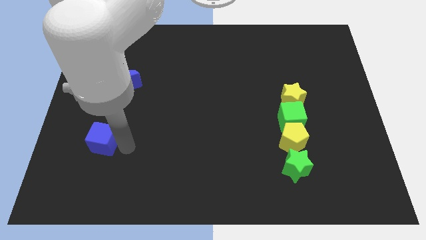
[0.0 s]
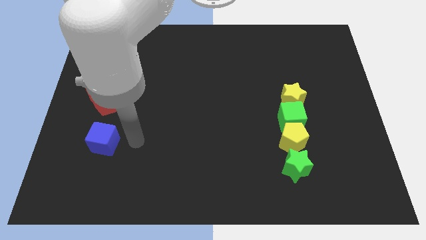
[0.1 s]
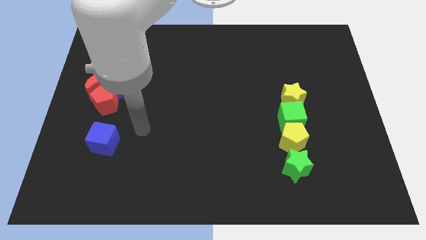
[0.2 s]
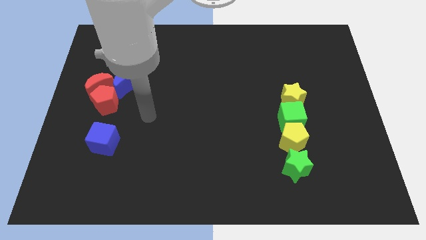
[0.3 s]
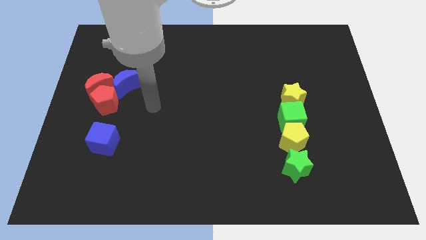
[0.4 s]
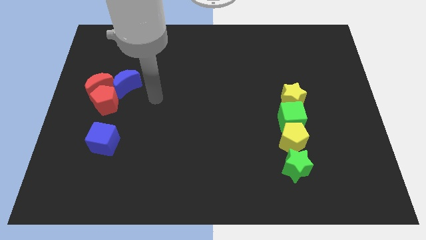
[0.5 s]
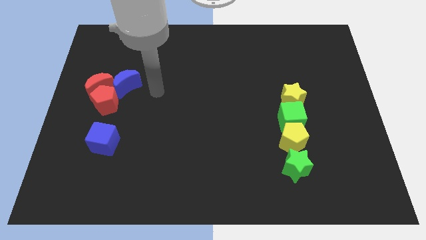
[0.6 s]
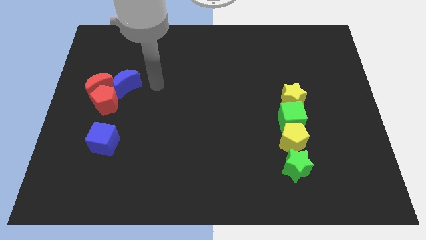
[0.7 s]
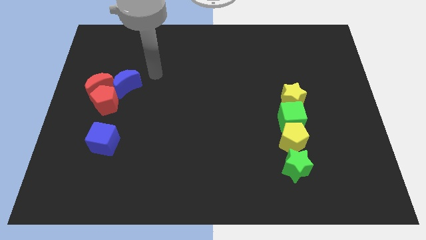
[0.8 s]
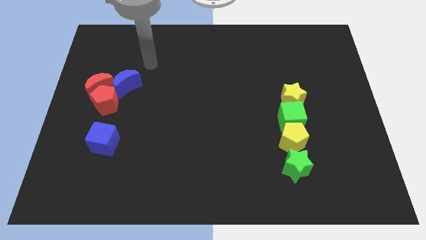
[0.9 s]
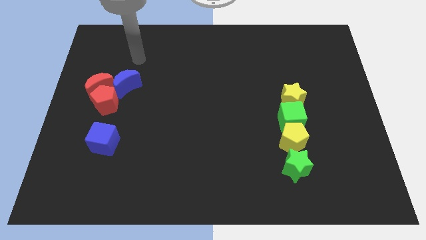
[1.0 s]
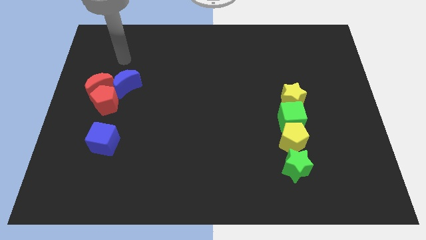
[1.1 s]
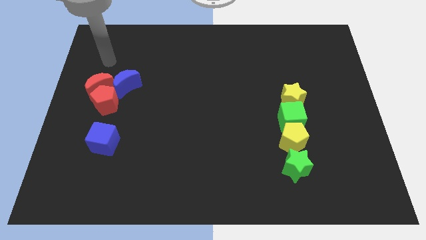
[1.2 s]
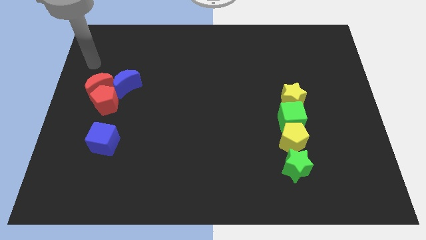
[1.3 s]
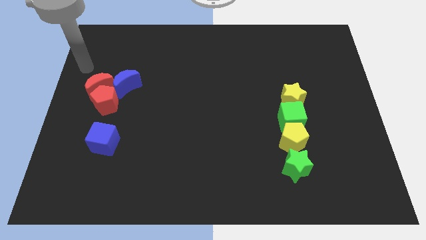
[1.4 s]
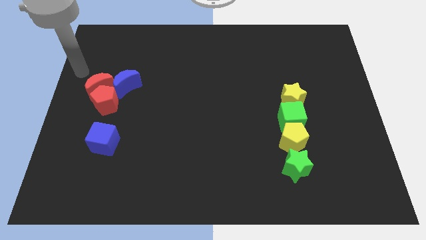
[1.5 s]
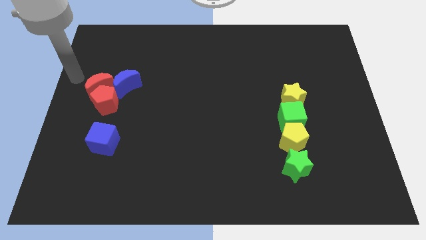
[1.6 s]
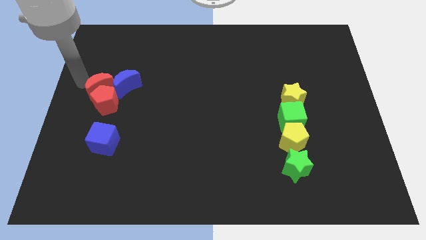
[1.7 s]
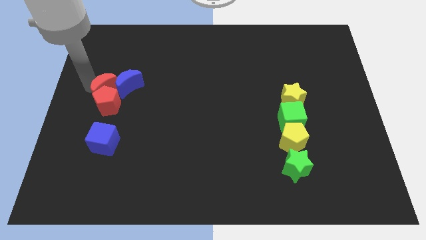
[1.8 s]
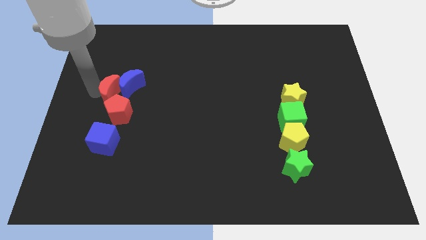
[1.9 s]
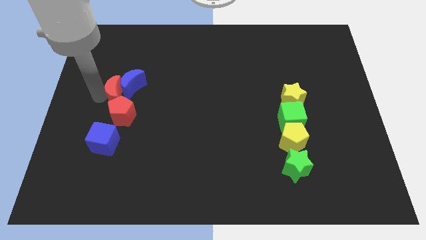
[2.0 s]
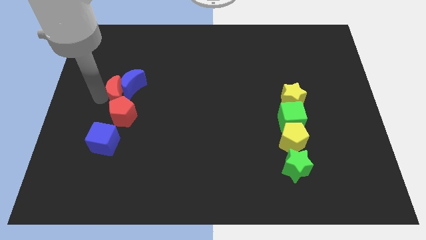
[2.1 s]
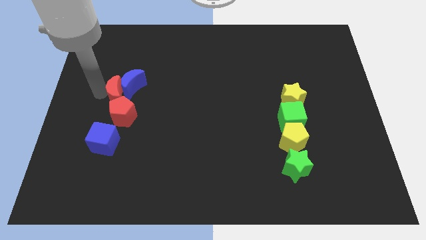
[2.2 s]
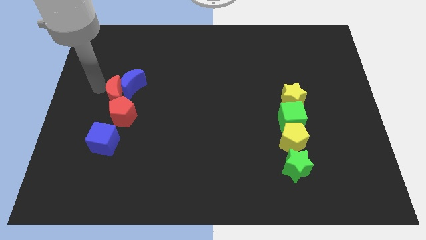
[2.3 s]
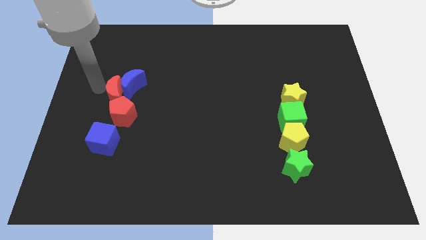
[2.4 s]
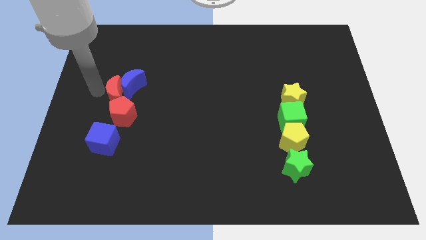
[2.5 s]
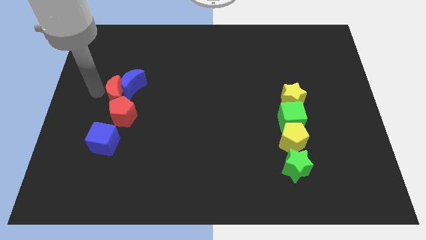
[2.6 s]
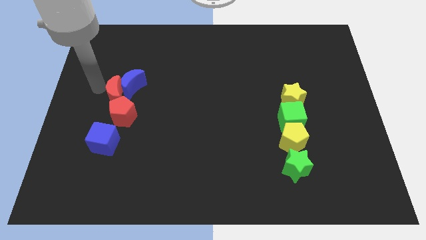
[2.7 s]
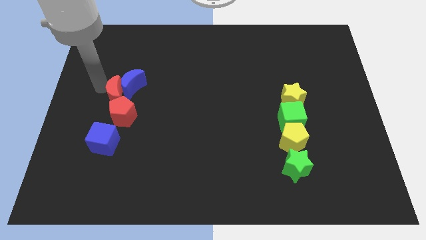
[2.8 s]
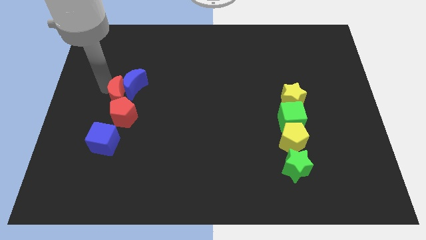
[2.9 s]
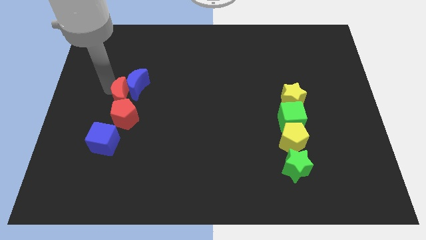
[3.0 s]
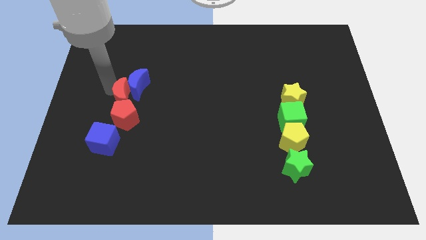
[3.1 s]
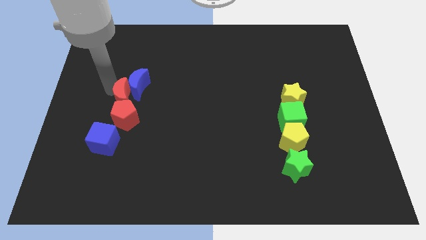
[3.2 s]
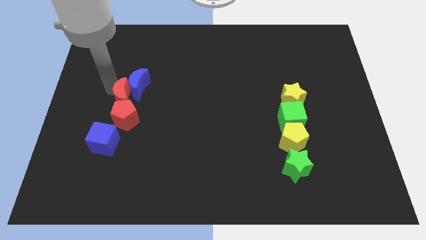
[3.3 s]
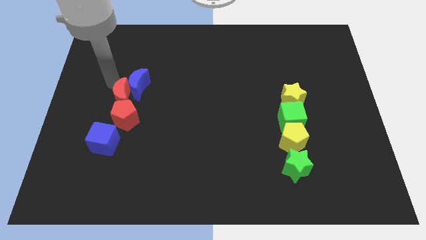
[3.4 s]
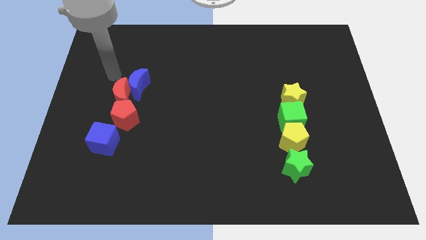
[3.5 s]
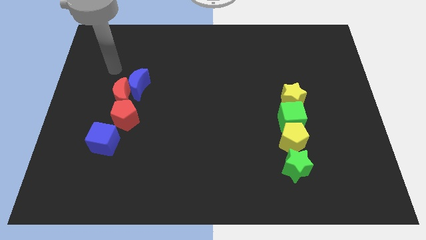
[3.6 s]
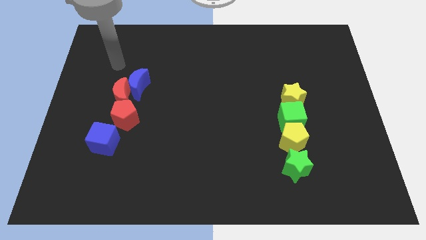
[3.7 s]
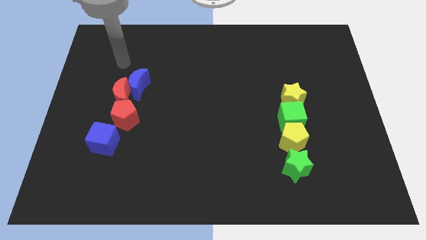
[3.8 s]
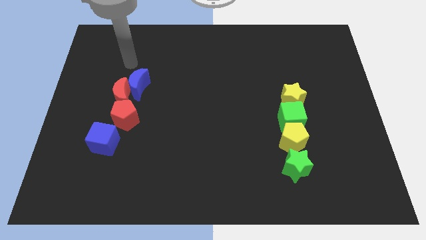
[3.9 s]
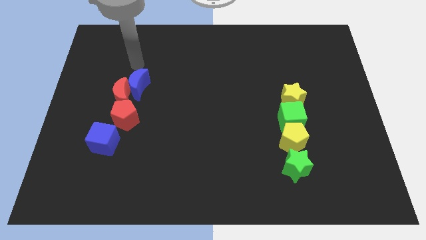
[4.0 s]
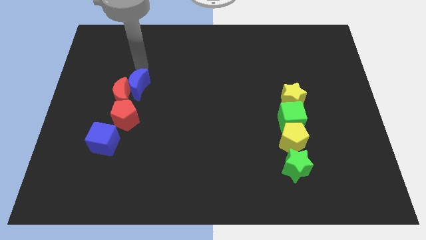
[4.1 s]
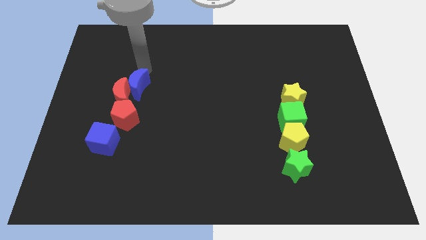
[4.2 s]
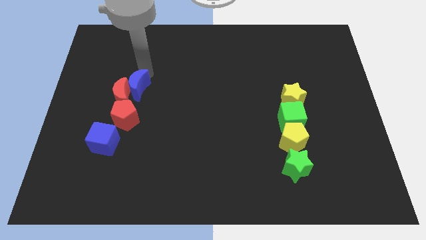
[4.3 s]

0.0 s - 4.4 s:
move the red crescent in between the blue crescent and red pentagon

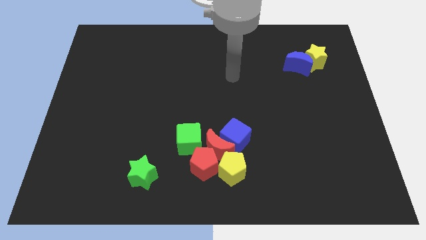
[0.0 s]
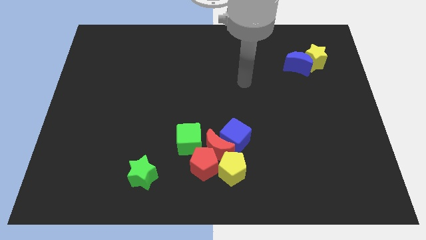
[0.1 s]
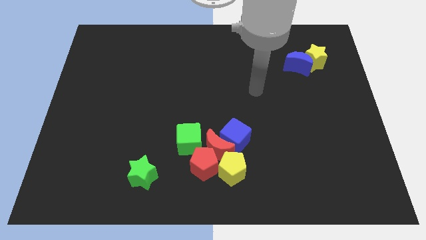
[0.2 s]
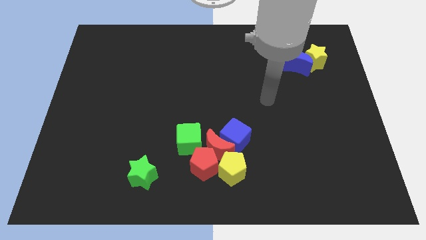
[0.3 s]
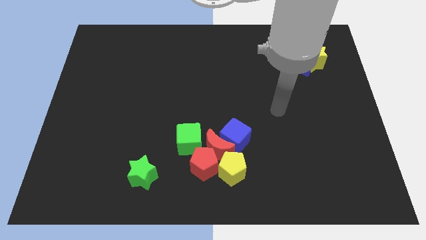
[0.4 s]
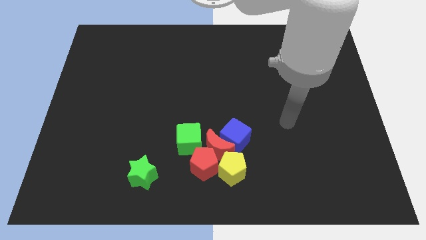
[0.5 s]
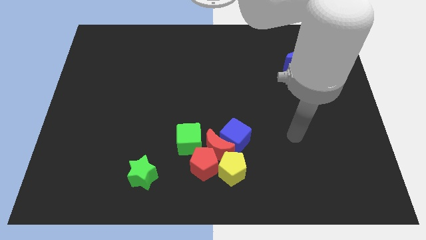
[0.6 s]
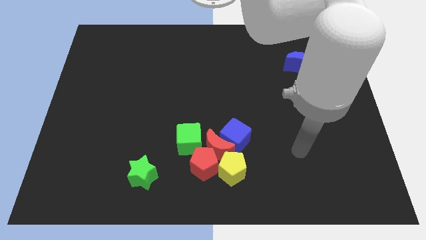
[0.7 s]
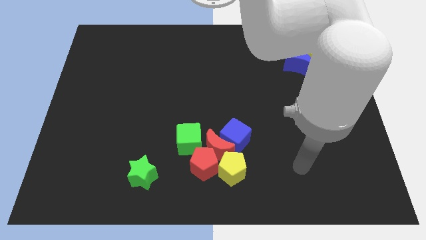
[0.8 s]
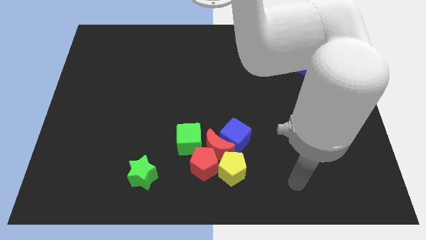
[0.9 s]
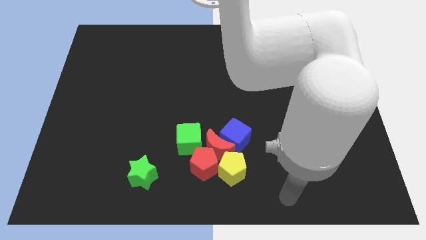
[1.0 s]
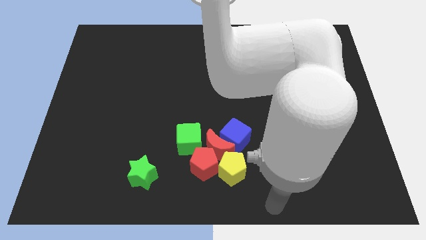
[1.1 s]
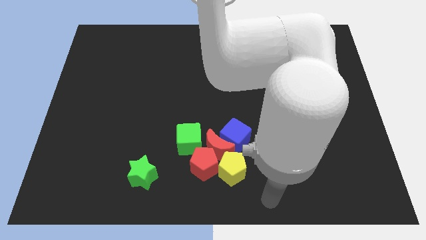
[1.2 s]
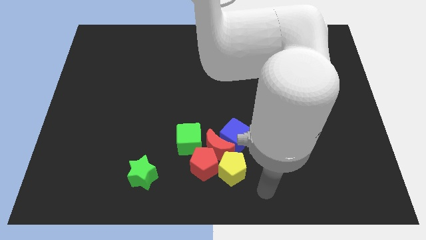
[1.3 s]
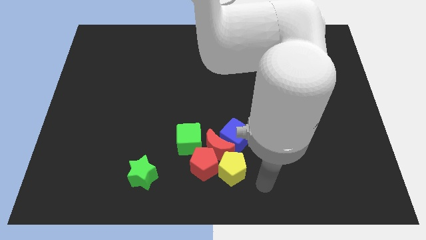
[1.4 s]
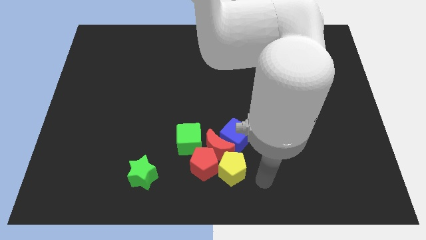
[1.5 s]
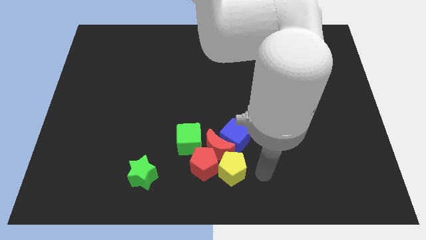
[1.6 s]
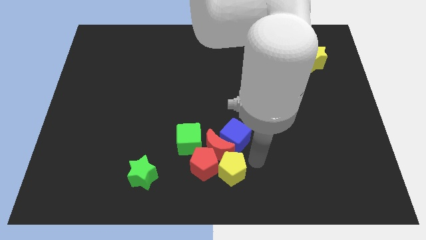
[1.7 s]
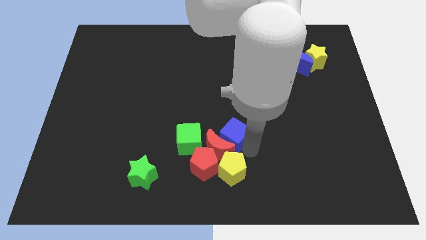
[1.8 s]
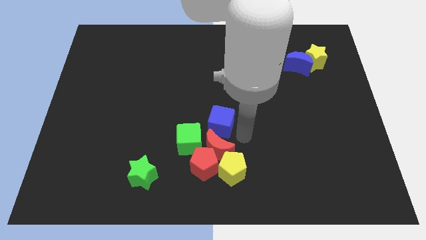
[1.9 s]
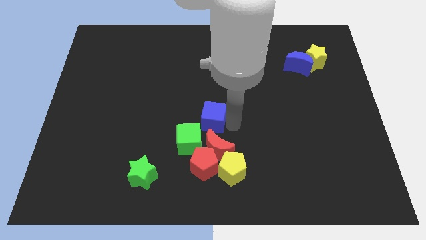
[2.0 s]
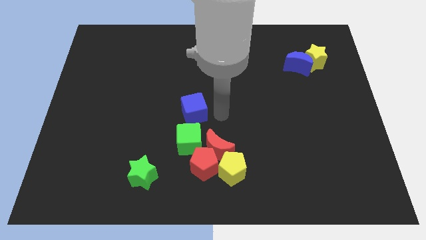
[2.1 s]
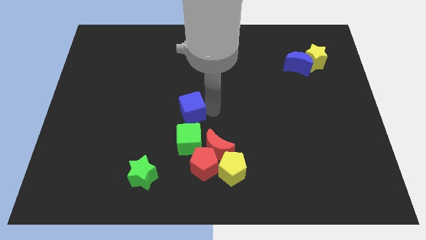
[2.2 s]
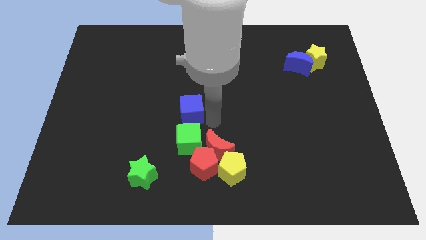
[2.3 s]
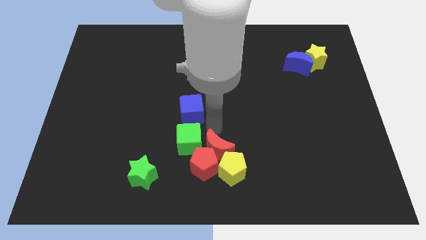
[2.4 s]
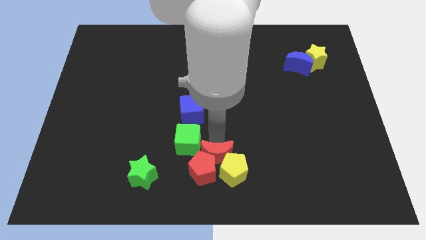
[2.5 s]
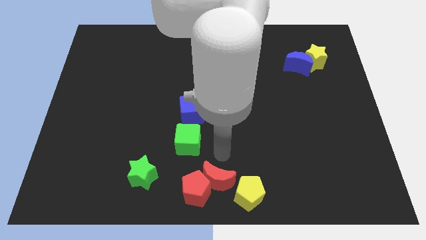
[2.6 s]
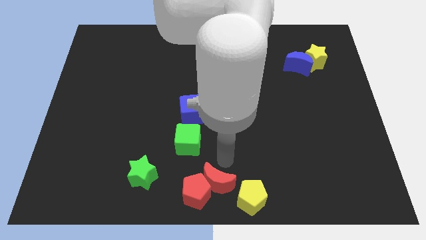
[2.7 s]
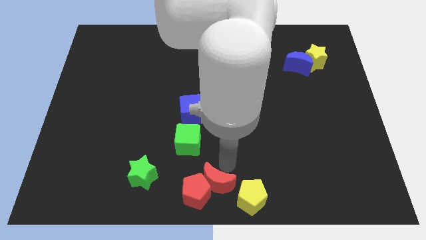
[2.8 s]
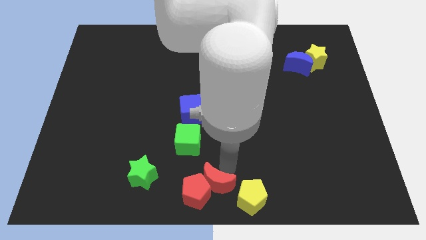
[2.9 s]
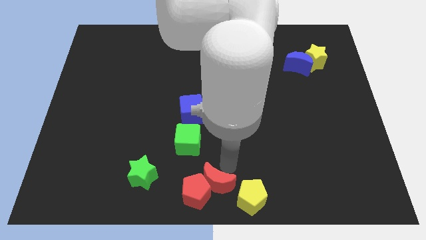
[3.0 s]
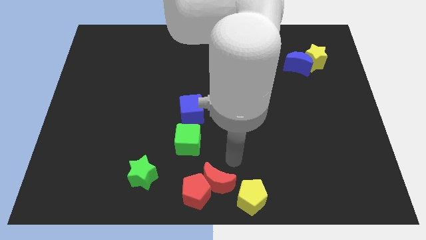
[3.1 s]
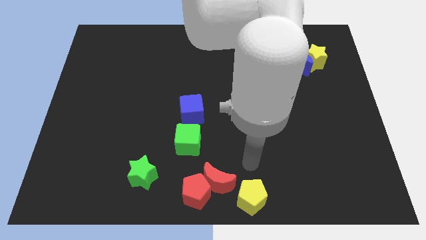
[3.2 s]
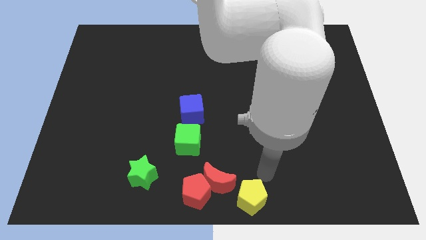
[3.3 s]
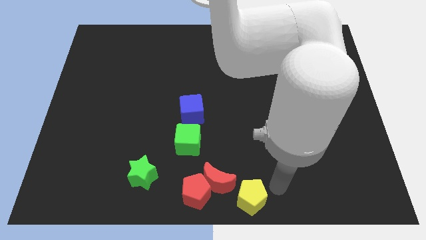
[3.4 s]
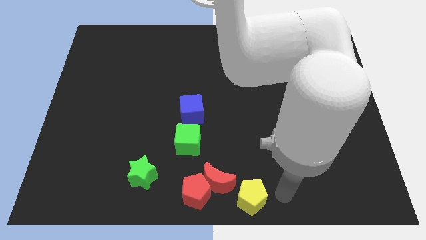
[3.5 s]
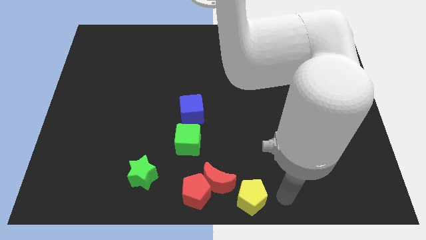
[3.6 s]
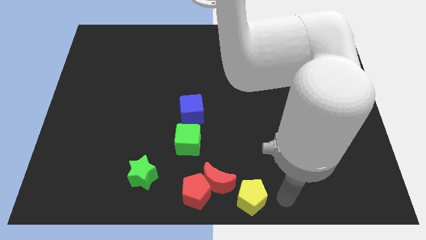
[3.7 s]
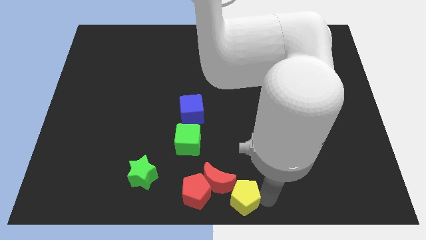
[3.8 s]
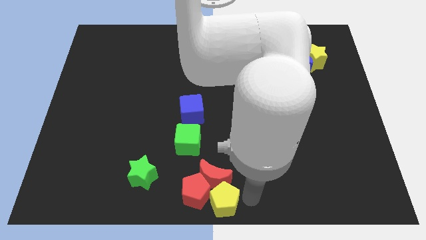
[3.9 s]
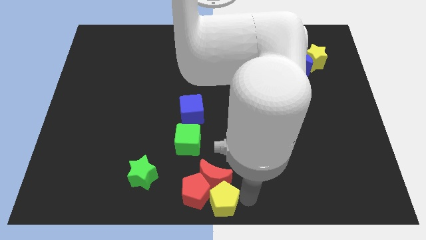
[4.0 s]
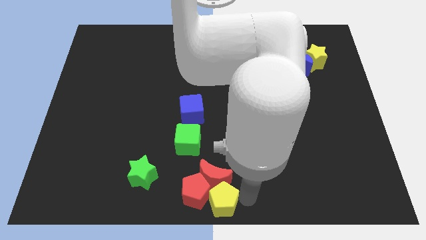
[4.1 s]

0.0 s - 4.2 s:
push the yellow pentagon into the red blocks

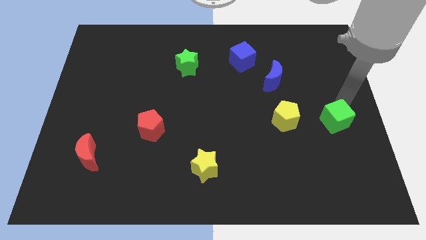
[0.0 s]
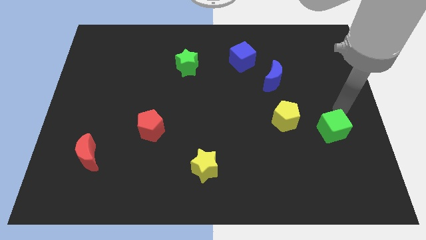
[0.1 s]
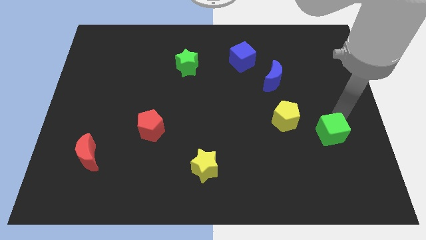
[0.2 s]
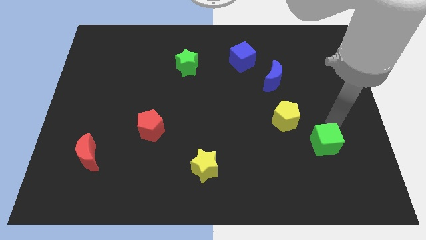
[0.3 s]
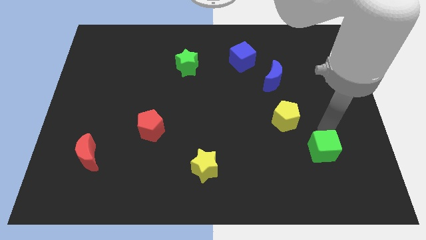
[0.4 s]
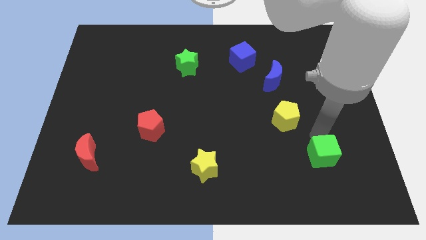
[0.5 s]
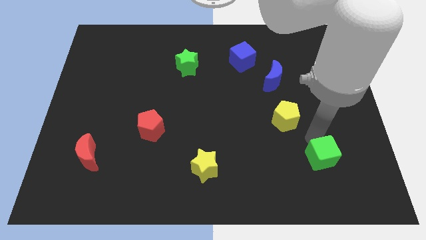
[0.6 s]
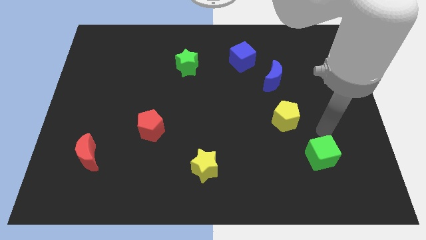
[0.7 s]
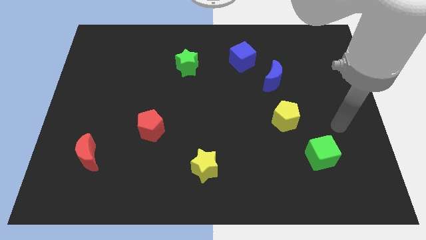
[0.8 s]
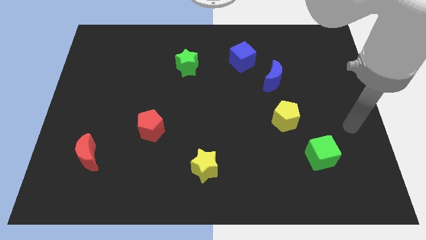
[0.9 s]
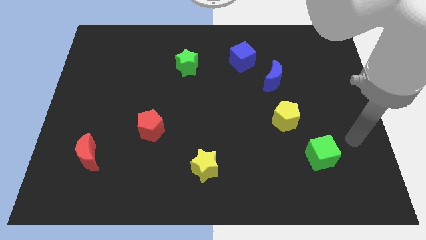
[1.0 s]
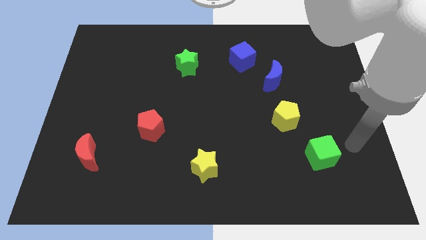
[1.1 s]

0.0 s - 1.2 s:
place the green cube to the right of the yellow star
